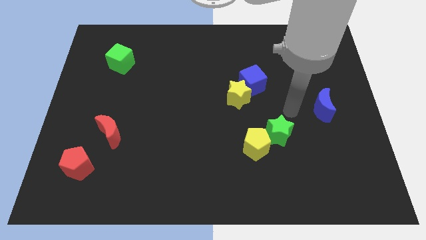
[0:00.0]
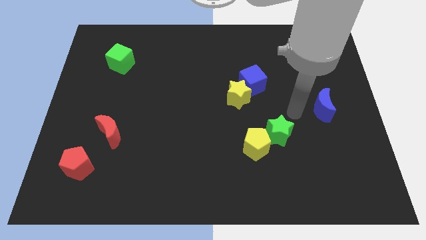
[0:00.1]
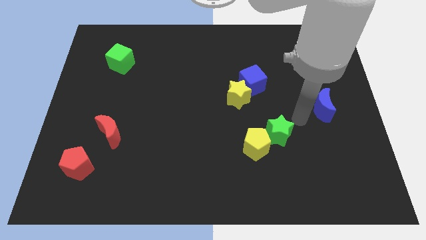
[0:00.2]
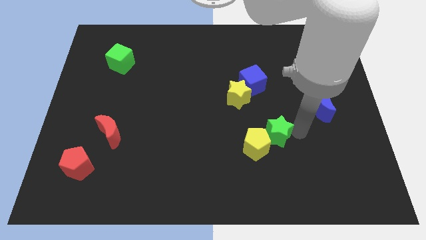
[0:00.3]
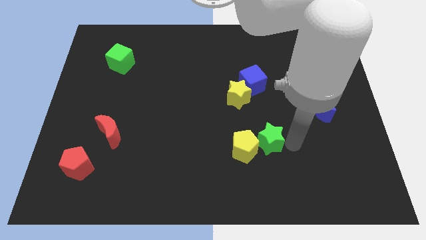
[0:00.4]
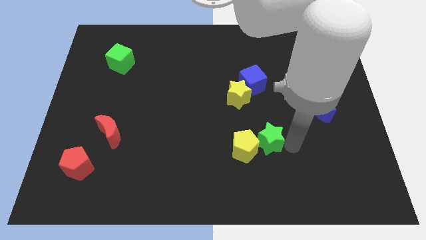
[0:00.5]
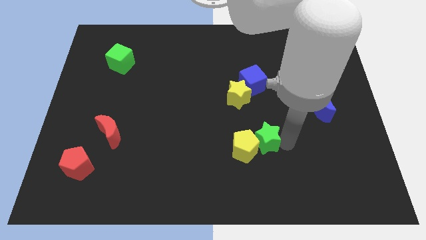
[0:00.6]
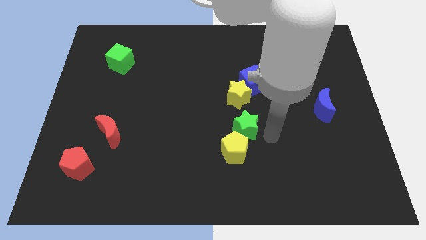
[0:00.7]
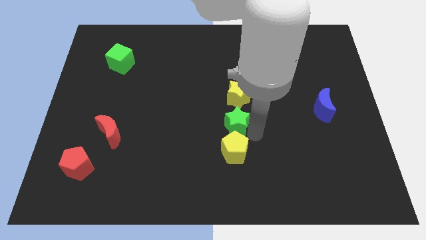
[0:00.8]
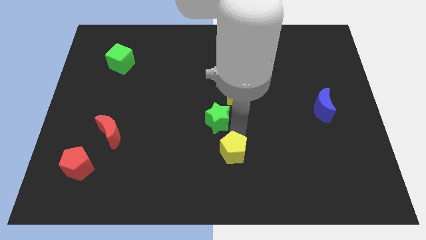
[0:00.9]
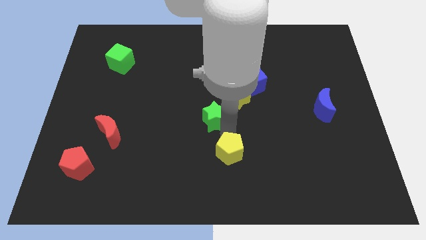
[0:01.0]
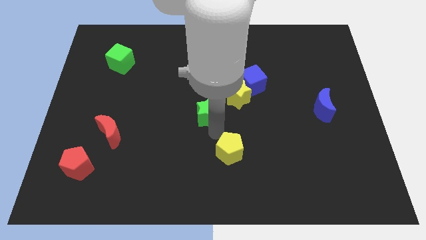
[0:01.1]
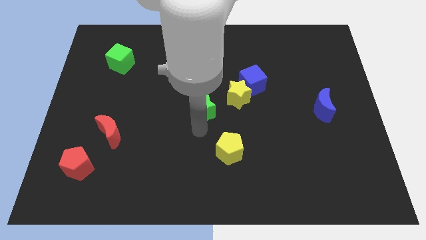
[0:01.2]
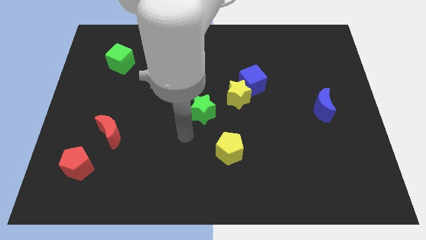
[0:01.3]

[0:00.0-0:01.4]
drag the green star to the left

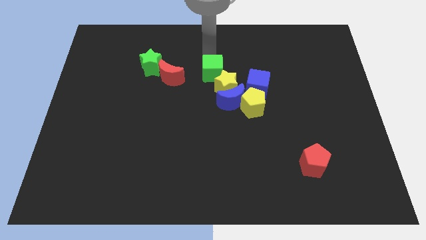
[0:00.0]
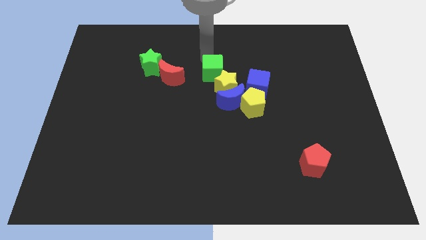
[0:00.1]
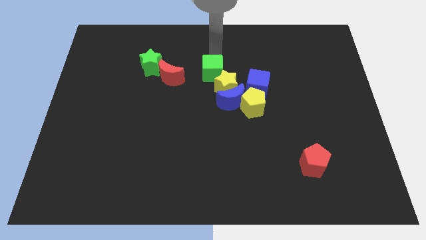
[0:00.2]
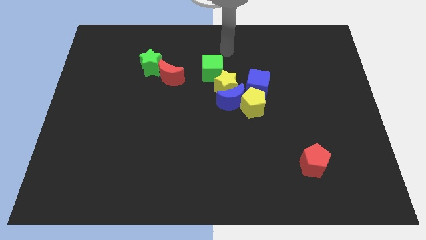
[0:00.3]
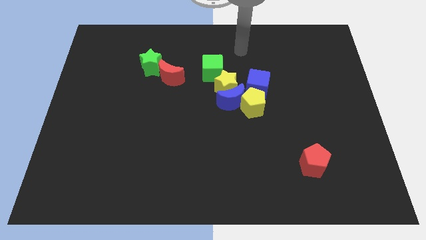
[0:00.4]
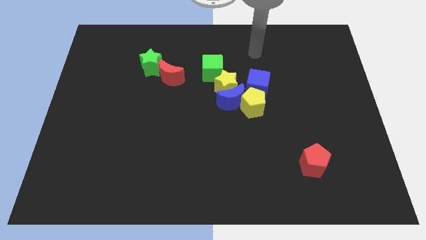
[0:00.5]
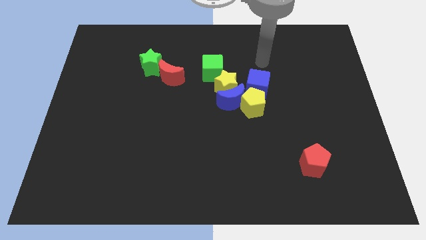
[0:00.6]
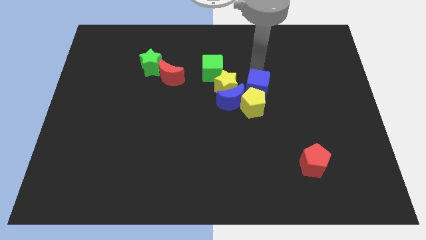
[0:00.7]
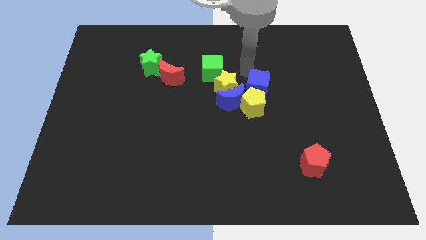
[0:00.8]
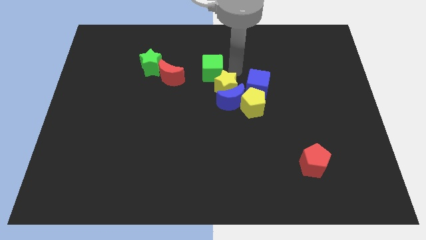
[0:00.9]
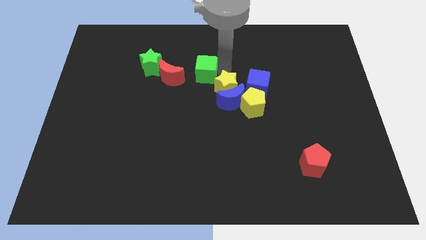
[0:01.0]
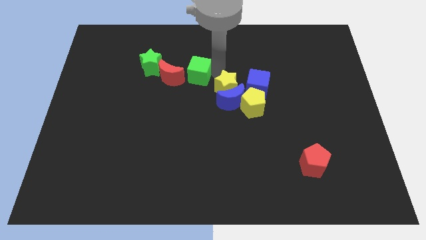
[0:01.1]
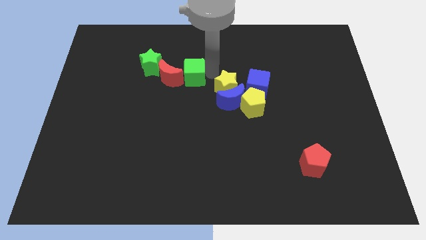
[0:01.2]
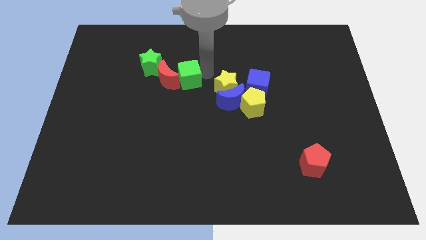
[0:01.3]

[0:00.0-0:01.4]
push the green cube right to the red moon

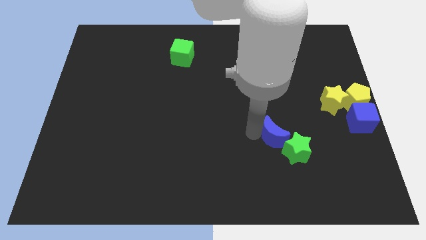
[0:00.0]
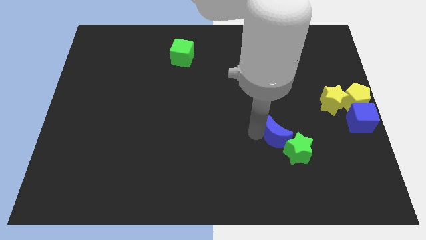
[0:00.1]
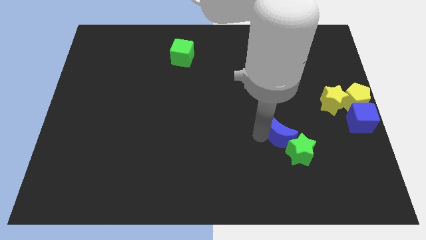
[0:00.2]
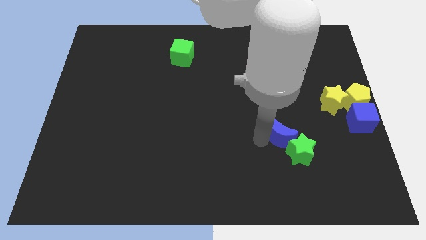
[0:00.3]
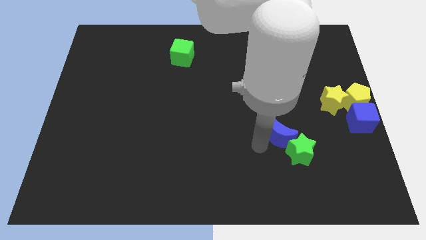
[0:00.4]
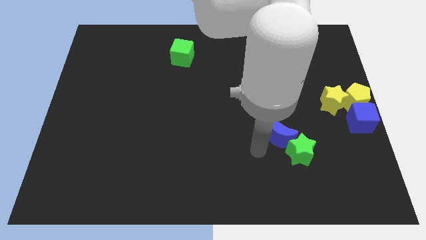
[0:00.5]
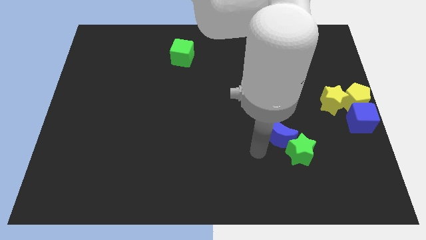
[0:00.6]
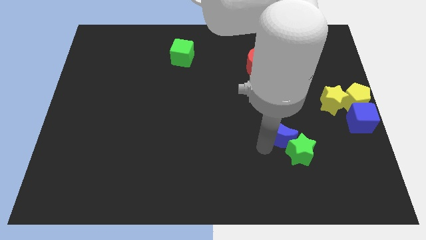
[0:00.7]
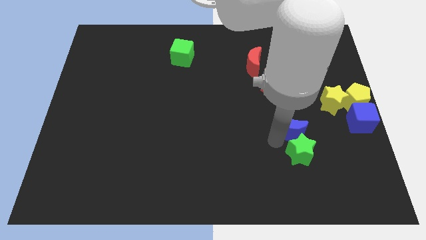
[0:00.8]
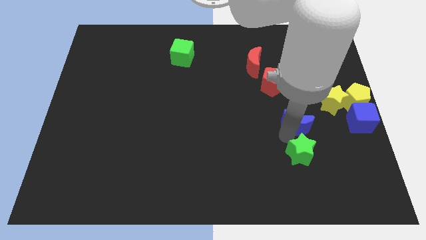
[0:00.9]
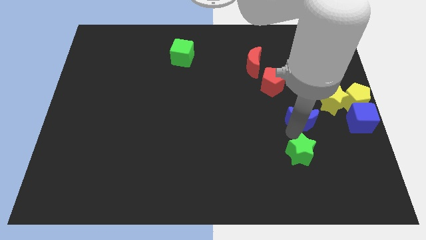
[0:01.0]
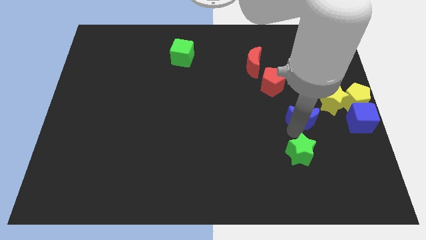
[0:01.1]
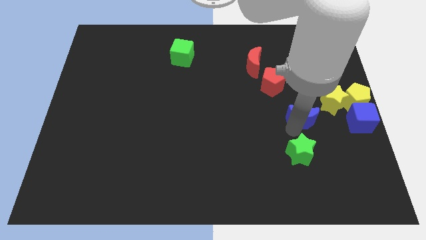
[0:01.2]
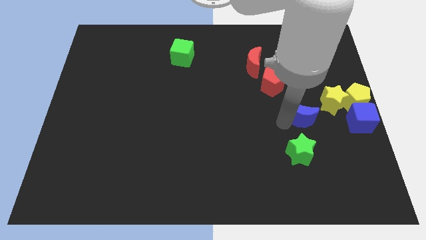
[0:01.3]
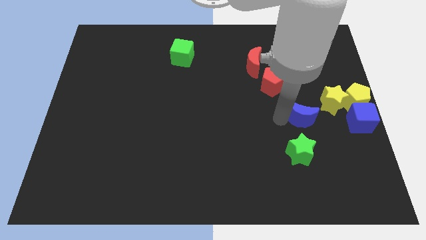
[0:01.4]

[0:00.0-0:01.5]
place the blue moon vertically to the top of the green star

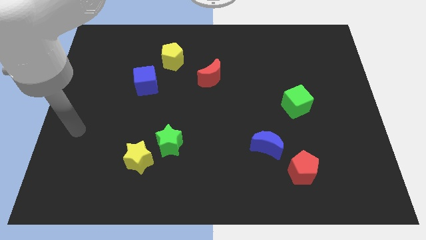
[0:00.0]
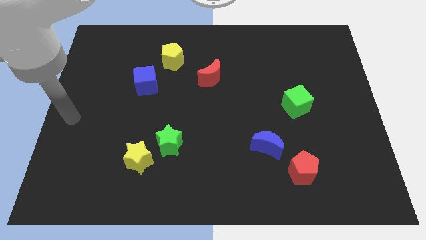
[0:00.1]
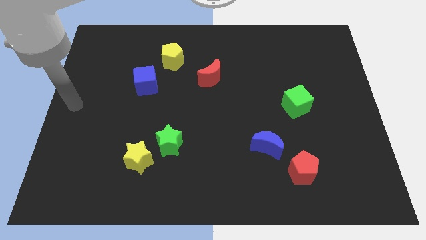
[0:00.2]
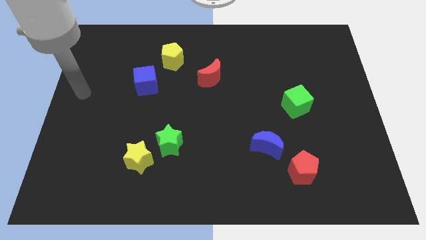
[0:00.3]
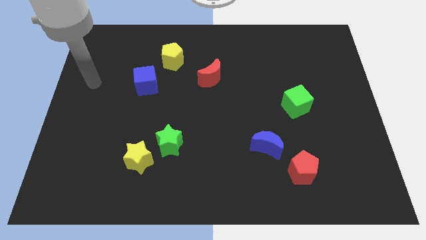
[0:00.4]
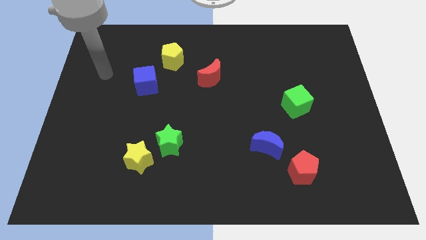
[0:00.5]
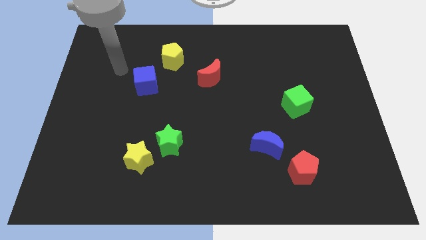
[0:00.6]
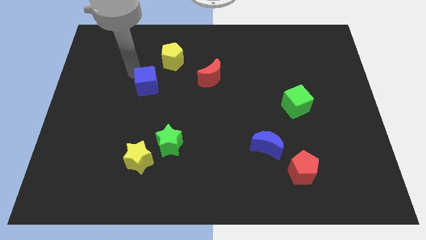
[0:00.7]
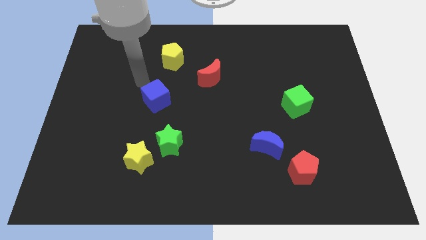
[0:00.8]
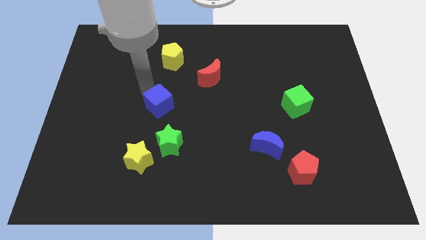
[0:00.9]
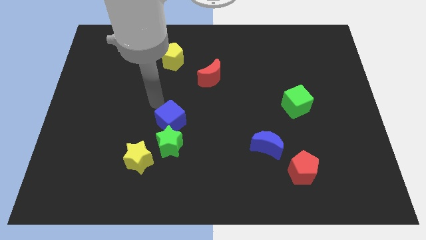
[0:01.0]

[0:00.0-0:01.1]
move blue cube in to green star

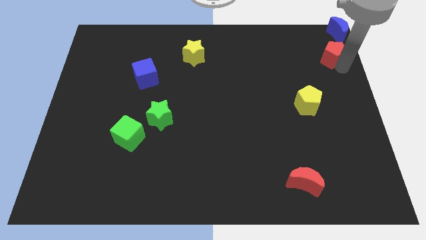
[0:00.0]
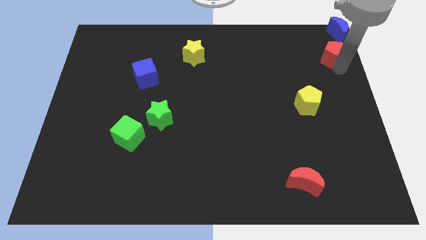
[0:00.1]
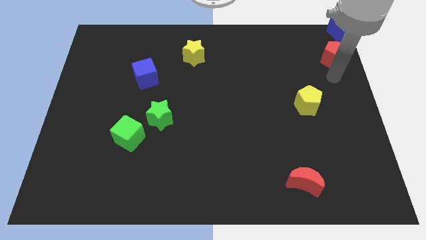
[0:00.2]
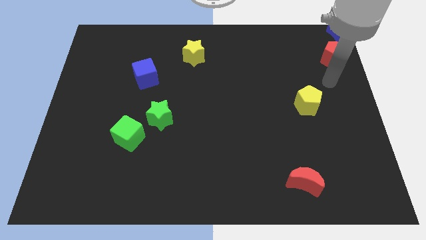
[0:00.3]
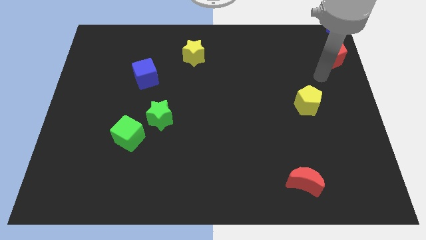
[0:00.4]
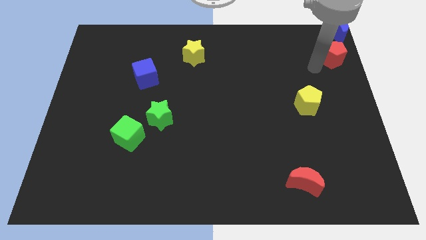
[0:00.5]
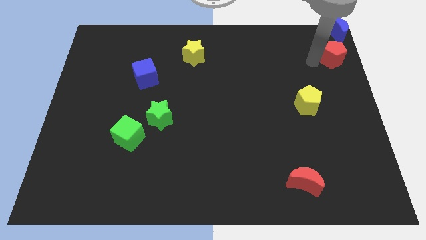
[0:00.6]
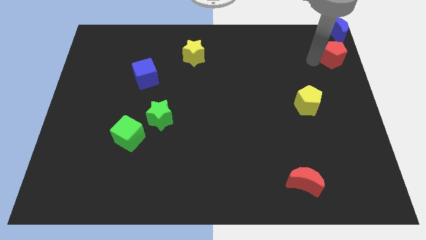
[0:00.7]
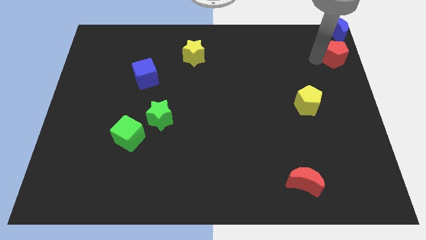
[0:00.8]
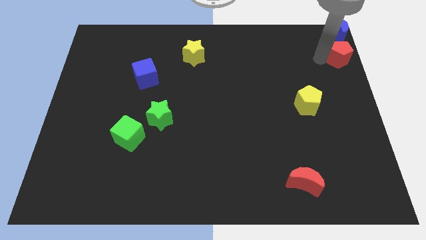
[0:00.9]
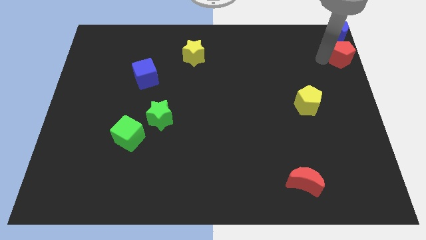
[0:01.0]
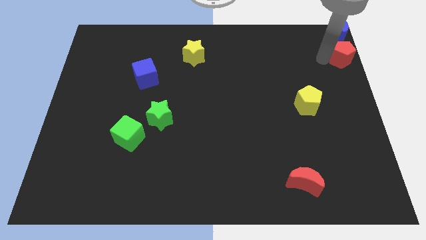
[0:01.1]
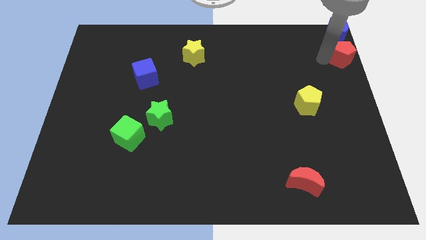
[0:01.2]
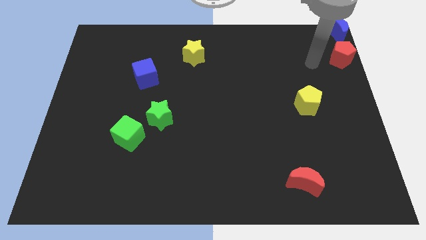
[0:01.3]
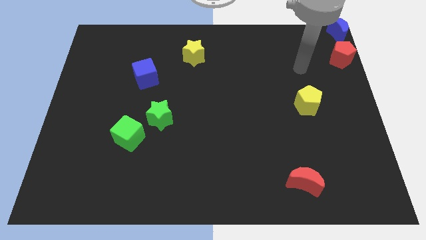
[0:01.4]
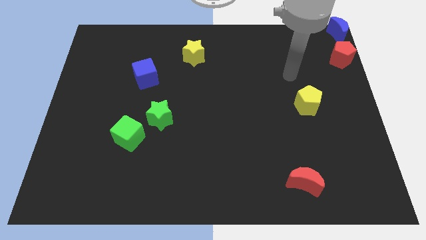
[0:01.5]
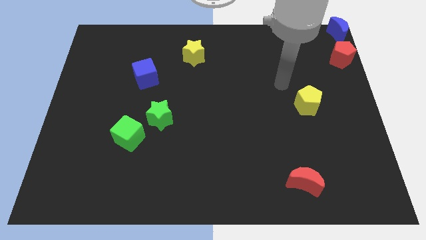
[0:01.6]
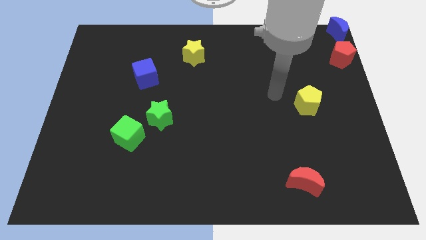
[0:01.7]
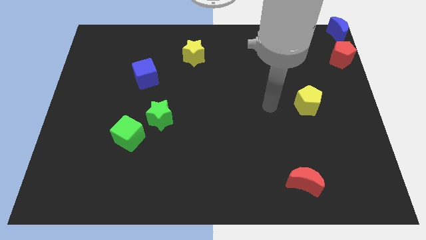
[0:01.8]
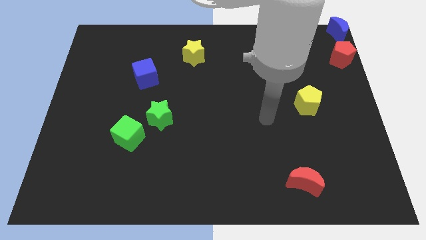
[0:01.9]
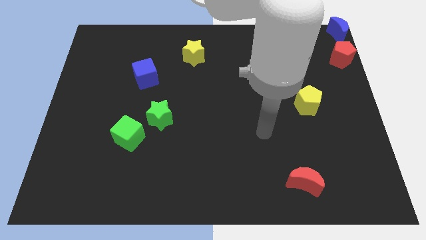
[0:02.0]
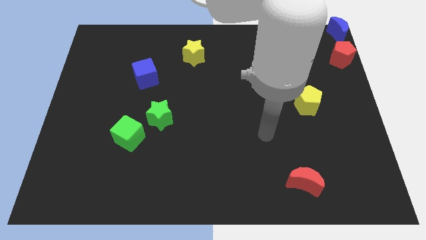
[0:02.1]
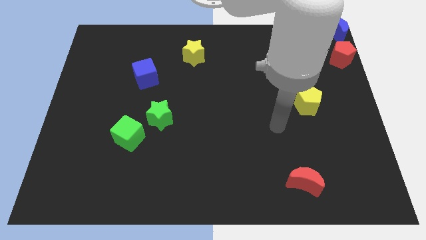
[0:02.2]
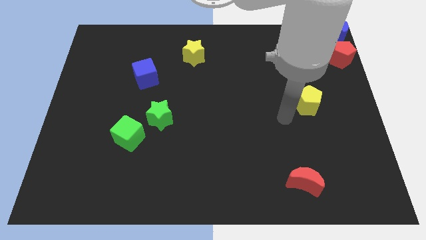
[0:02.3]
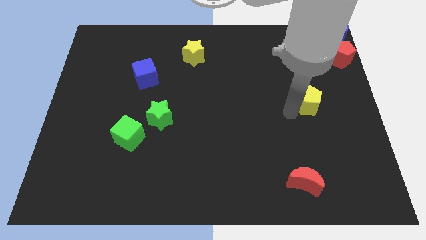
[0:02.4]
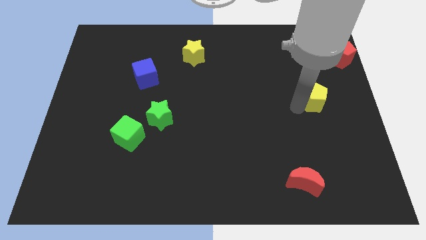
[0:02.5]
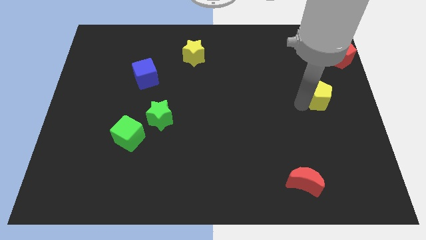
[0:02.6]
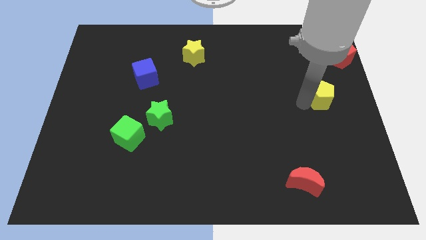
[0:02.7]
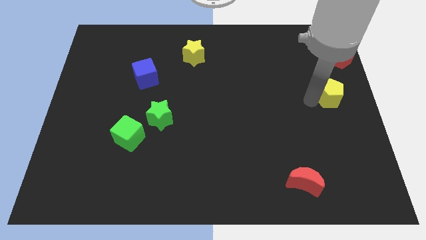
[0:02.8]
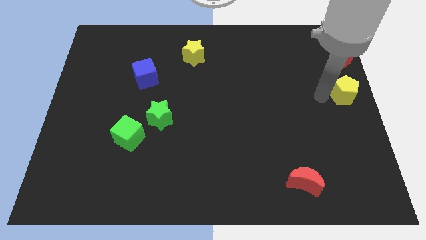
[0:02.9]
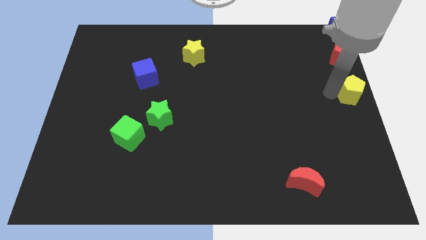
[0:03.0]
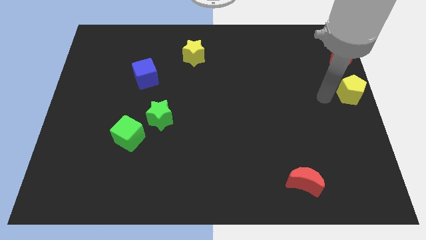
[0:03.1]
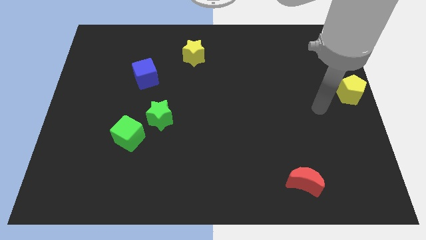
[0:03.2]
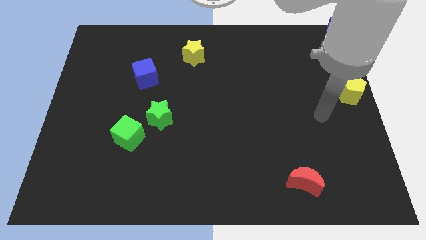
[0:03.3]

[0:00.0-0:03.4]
put the yellow pentagon vertically below the blue moon

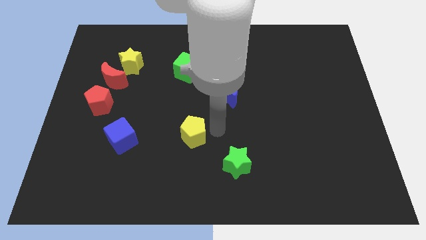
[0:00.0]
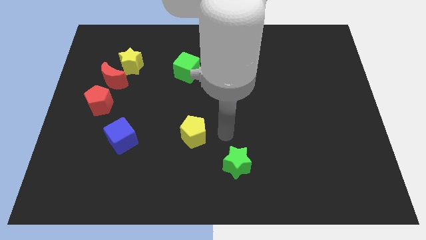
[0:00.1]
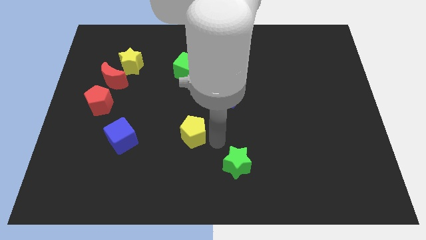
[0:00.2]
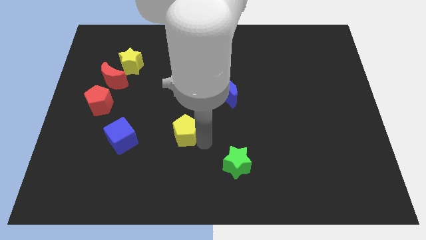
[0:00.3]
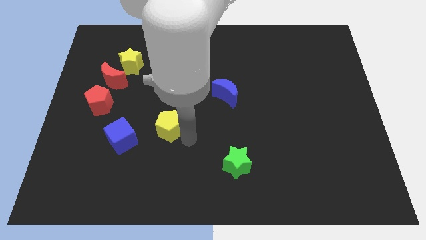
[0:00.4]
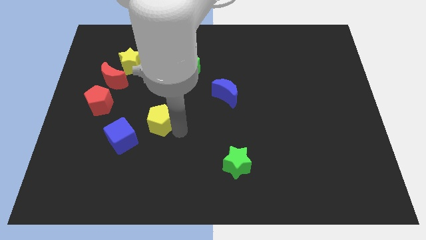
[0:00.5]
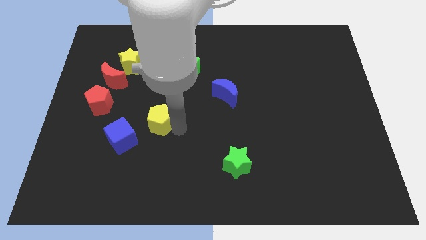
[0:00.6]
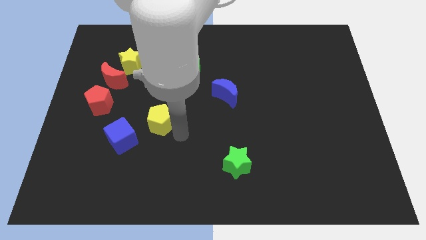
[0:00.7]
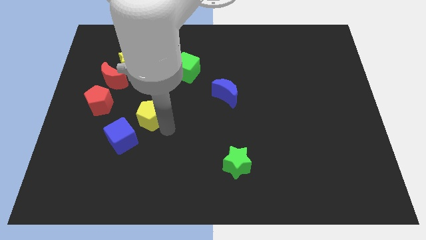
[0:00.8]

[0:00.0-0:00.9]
place the yellow pentagon at the top right side of blue cube
